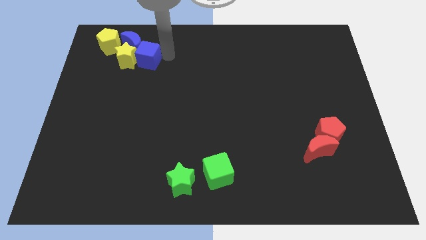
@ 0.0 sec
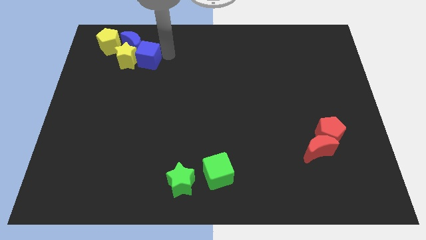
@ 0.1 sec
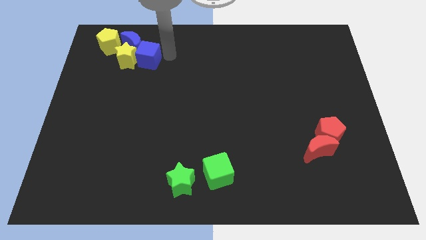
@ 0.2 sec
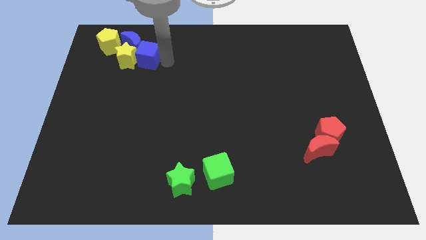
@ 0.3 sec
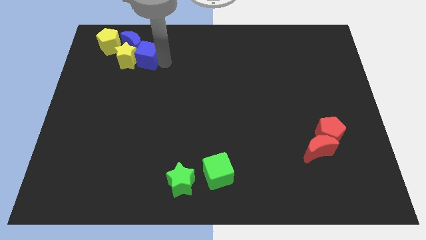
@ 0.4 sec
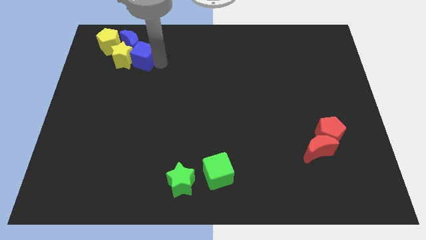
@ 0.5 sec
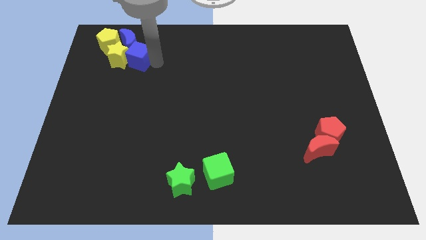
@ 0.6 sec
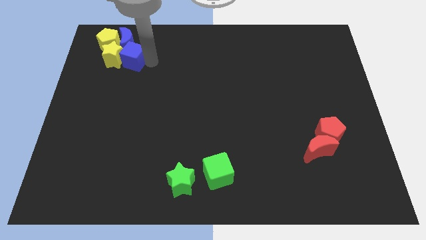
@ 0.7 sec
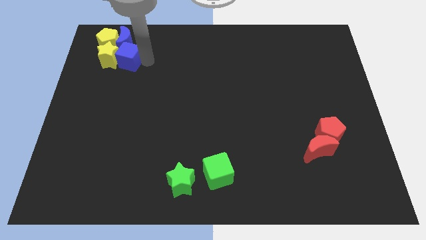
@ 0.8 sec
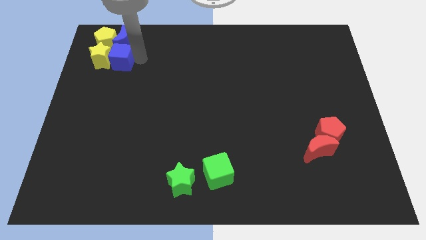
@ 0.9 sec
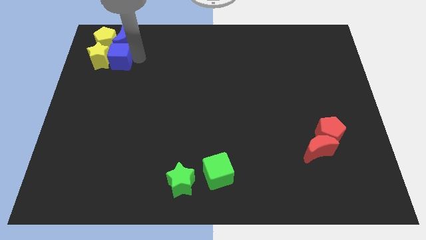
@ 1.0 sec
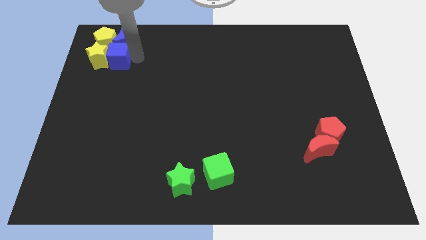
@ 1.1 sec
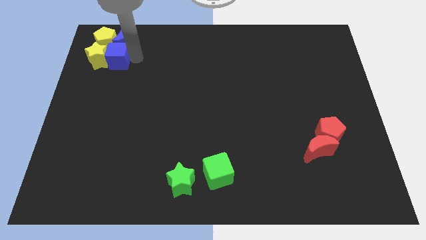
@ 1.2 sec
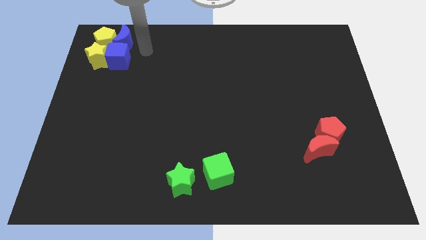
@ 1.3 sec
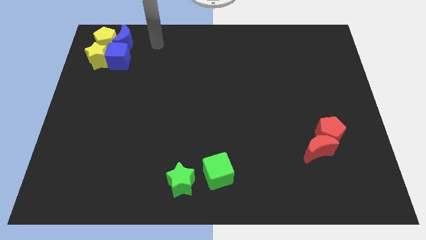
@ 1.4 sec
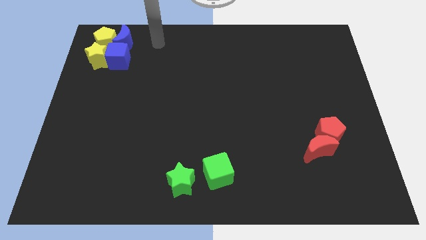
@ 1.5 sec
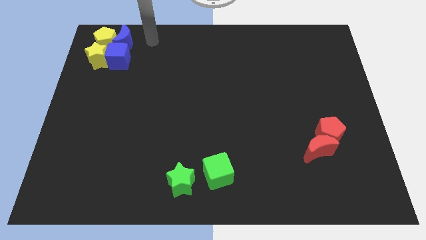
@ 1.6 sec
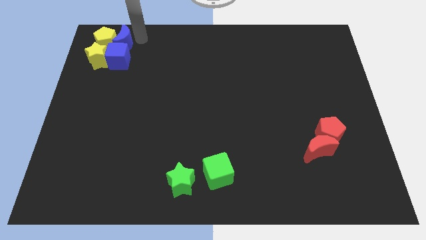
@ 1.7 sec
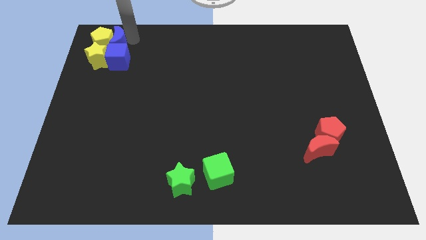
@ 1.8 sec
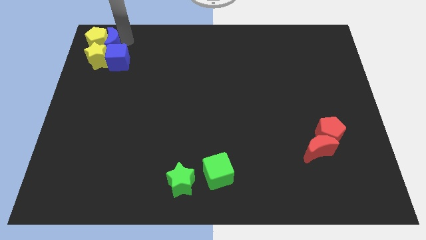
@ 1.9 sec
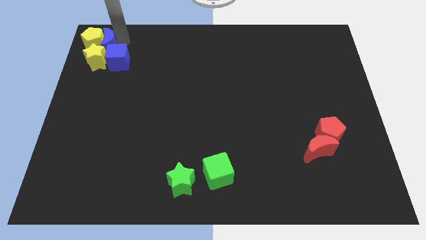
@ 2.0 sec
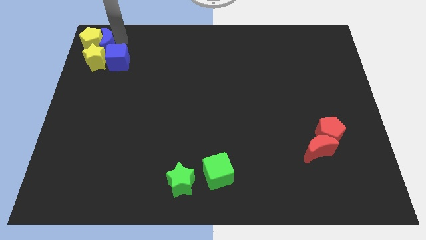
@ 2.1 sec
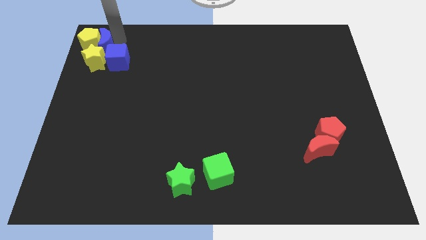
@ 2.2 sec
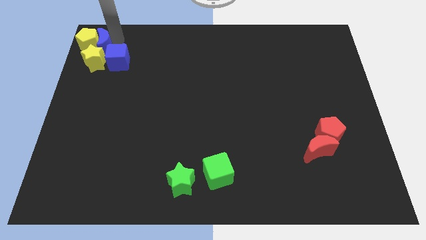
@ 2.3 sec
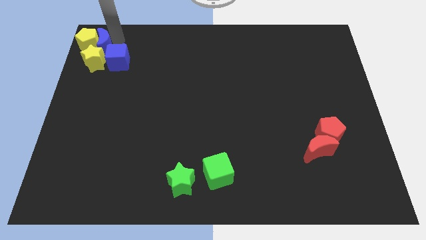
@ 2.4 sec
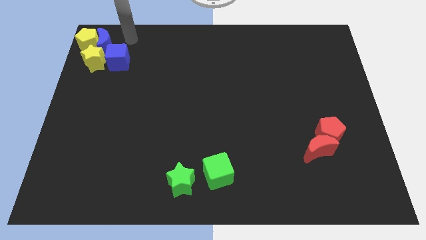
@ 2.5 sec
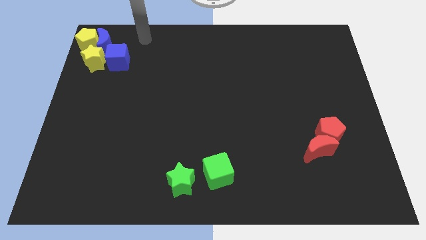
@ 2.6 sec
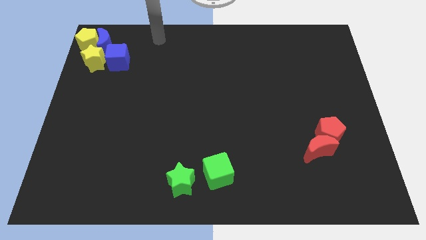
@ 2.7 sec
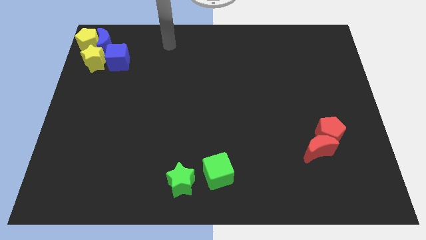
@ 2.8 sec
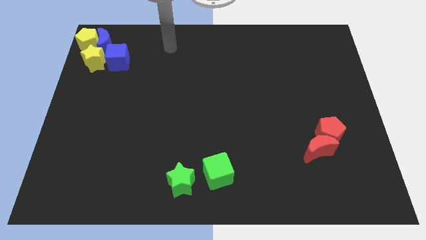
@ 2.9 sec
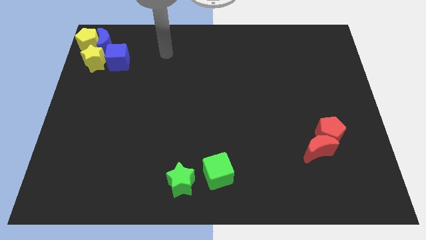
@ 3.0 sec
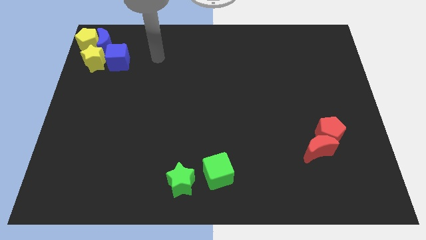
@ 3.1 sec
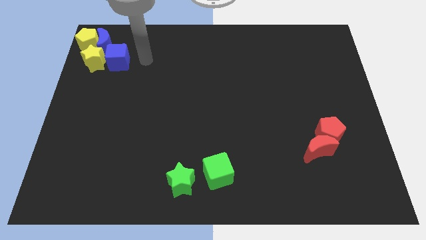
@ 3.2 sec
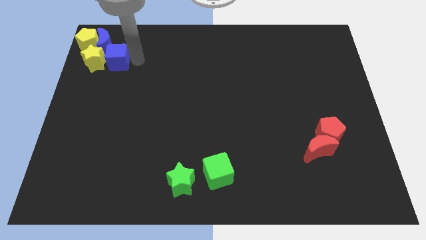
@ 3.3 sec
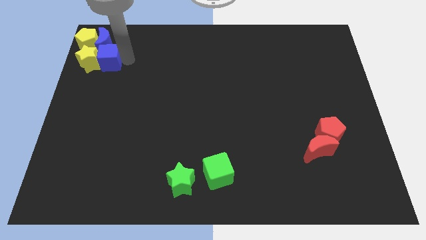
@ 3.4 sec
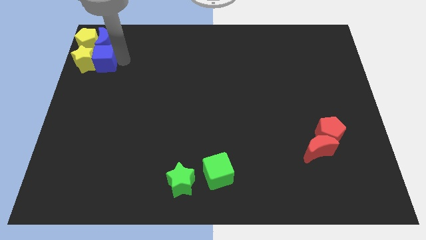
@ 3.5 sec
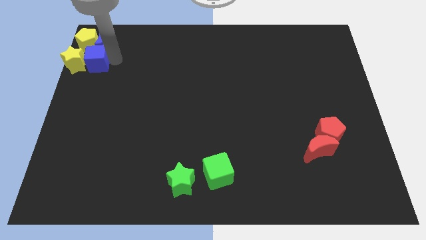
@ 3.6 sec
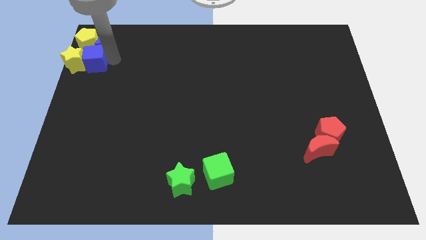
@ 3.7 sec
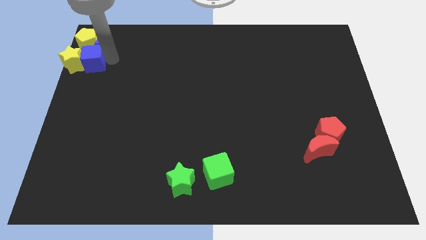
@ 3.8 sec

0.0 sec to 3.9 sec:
move yellow blocks and blue blocks to top left corner

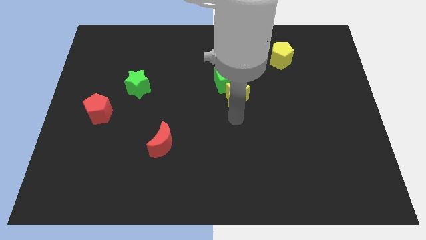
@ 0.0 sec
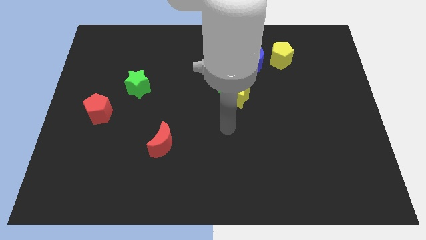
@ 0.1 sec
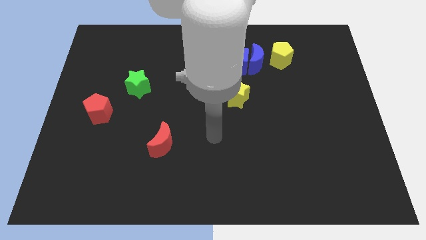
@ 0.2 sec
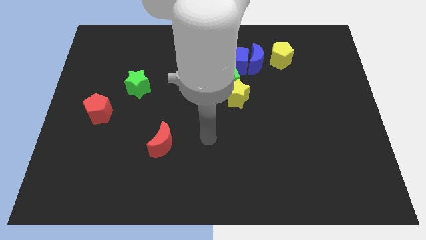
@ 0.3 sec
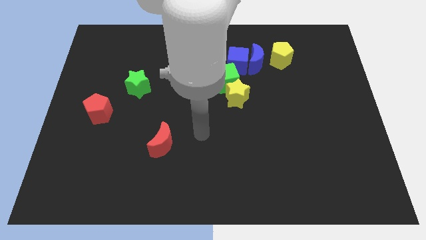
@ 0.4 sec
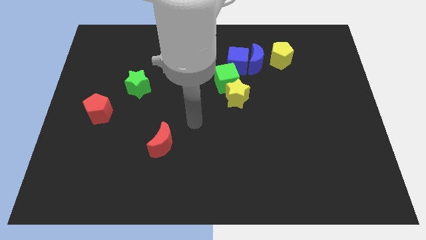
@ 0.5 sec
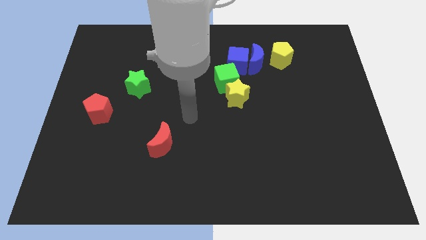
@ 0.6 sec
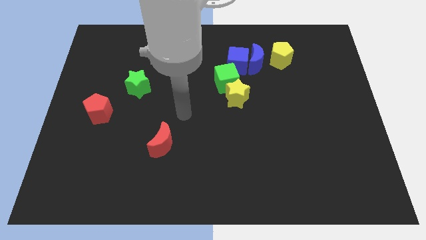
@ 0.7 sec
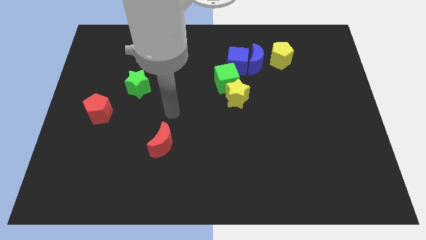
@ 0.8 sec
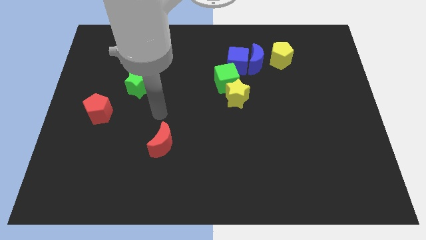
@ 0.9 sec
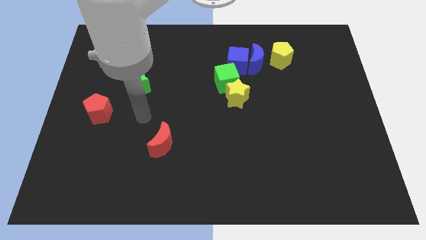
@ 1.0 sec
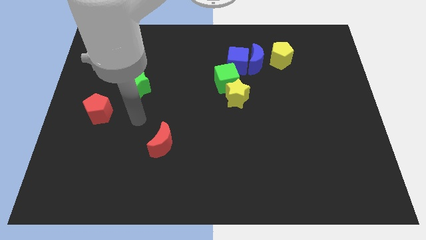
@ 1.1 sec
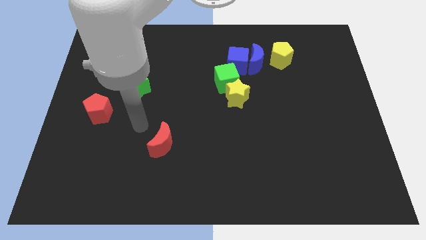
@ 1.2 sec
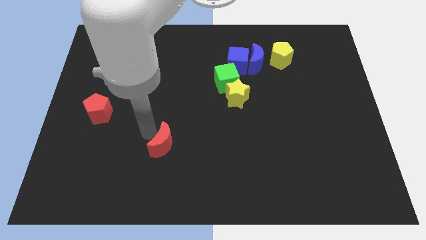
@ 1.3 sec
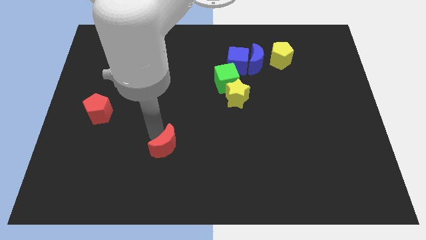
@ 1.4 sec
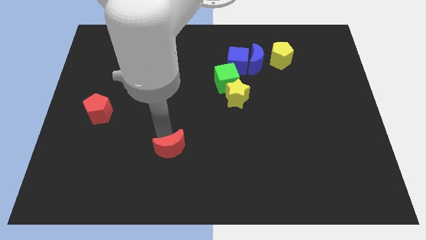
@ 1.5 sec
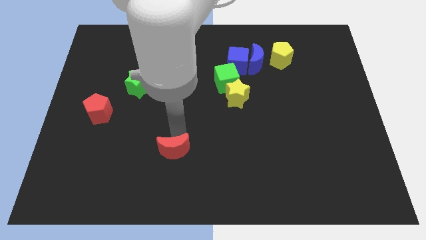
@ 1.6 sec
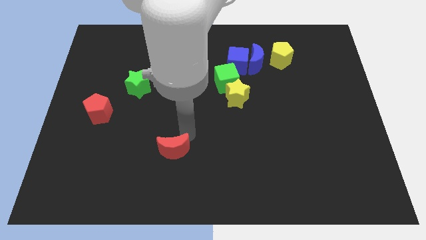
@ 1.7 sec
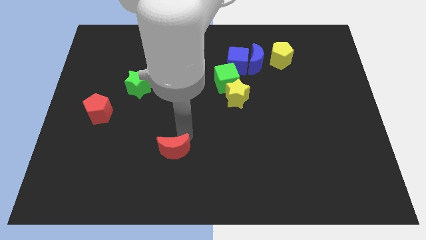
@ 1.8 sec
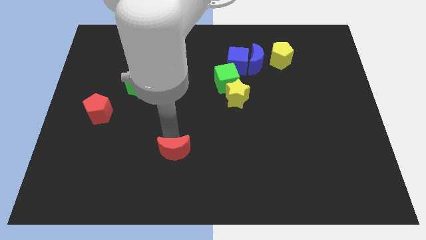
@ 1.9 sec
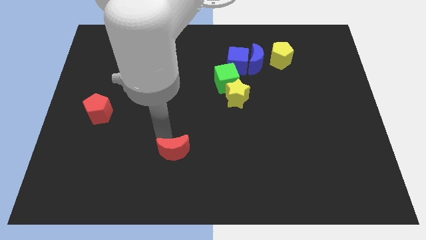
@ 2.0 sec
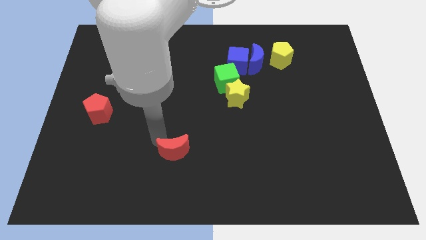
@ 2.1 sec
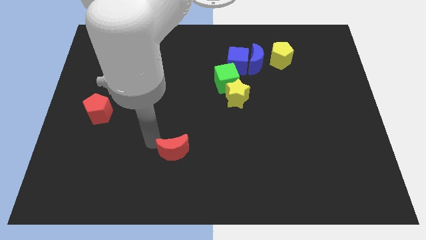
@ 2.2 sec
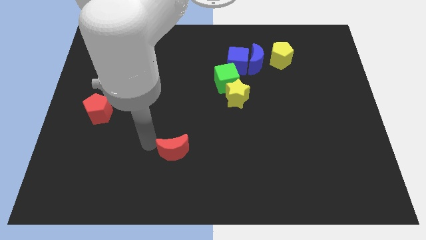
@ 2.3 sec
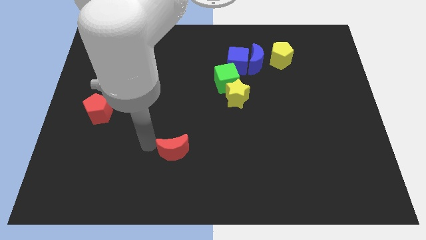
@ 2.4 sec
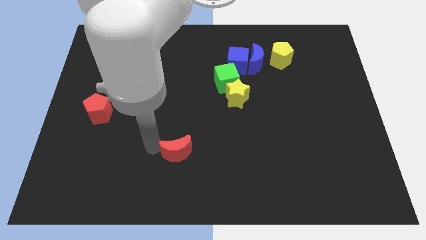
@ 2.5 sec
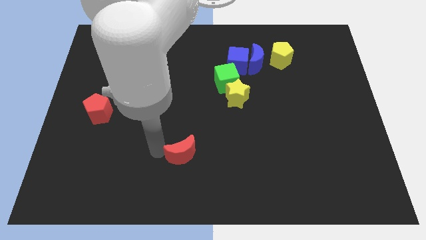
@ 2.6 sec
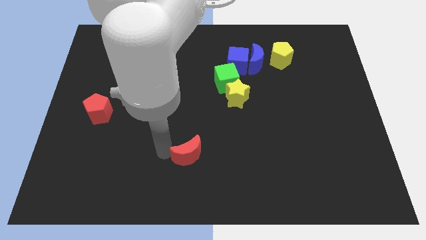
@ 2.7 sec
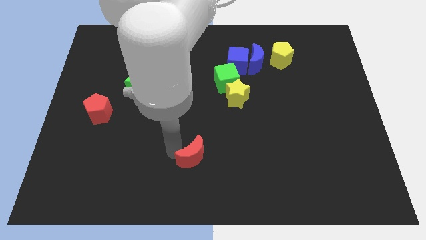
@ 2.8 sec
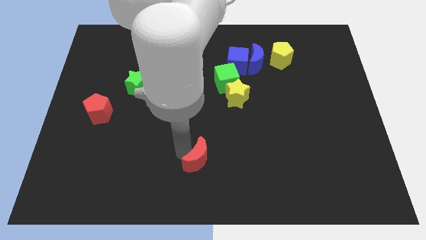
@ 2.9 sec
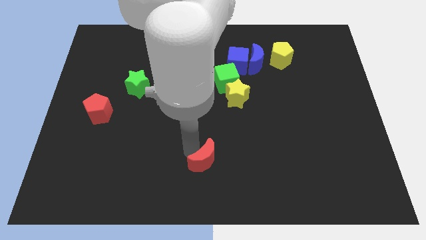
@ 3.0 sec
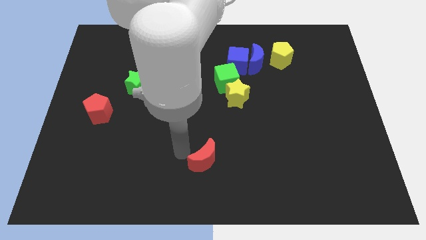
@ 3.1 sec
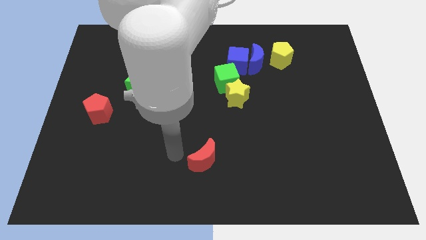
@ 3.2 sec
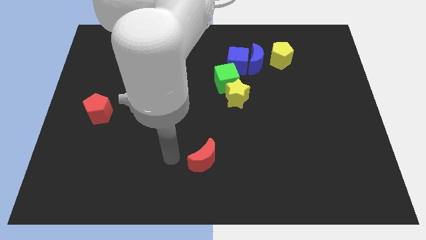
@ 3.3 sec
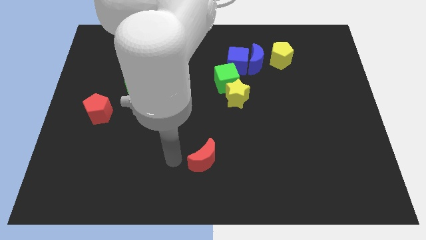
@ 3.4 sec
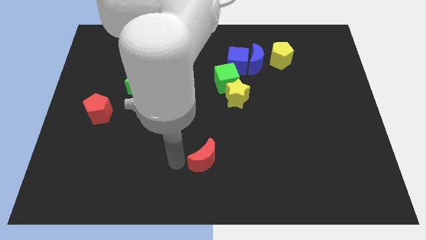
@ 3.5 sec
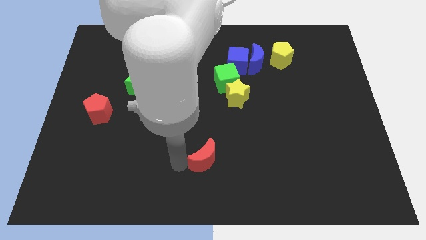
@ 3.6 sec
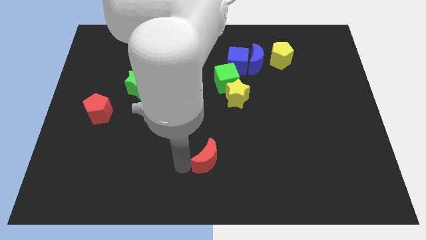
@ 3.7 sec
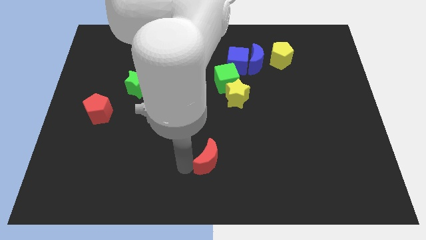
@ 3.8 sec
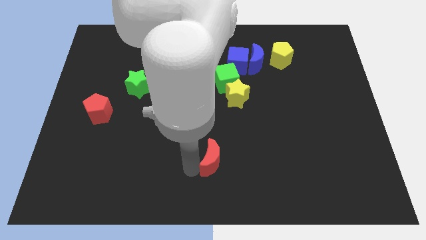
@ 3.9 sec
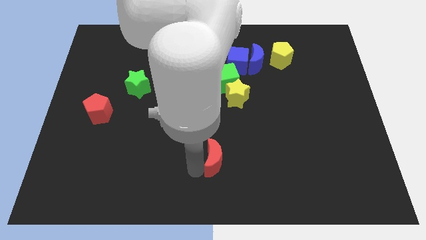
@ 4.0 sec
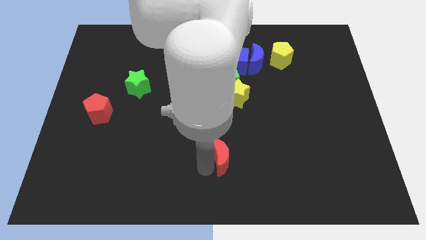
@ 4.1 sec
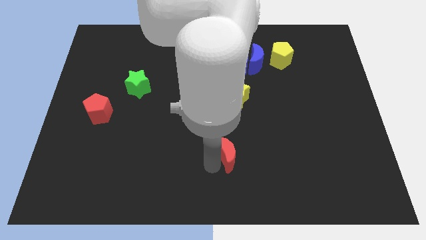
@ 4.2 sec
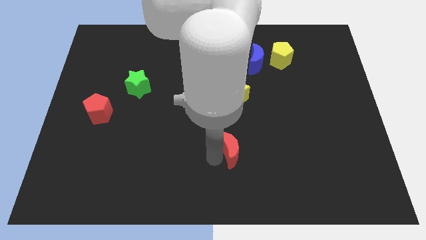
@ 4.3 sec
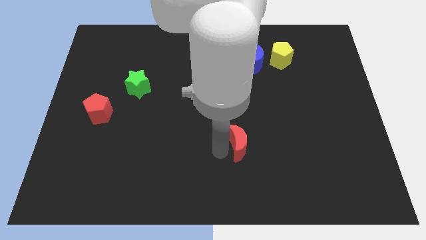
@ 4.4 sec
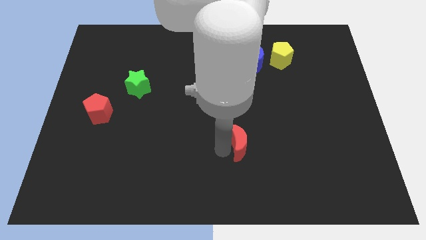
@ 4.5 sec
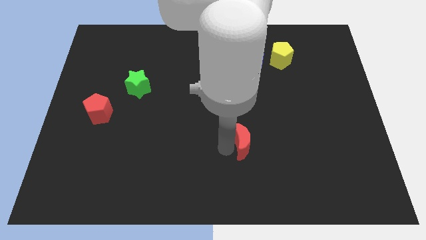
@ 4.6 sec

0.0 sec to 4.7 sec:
push the red moon towards the right side of the board

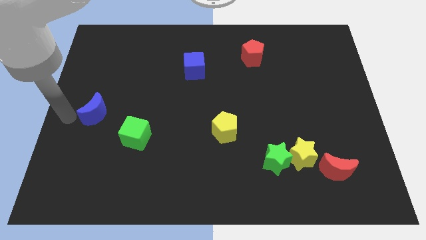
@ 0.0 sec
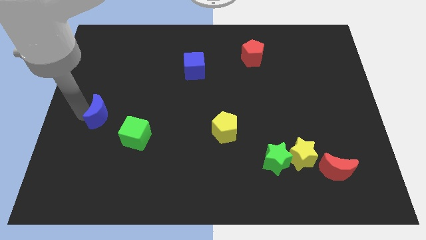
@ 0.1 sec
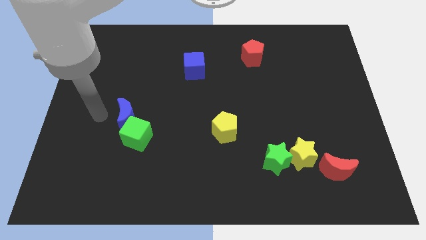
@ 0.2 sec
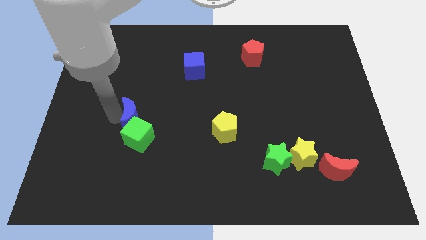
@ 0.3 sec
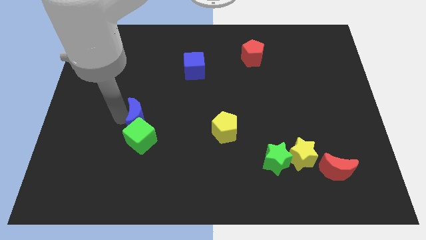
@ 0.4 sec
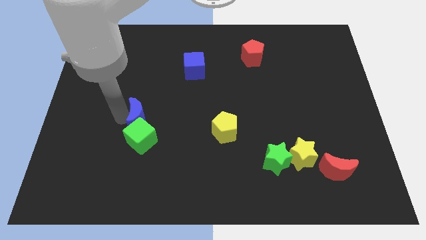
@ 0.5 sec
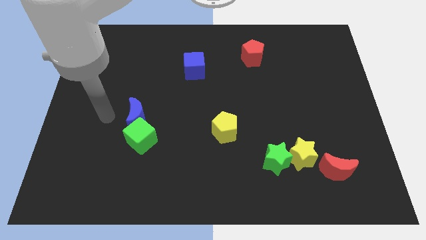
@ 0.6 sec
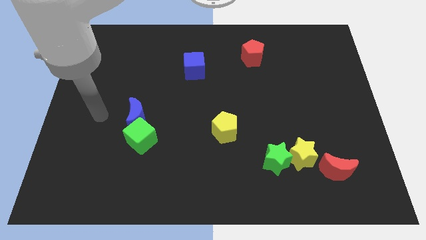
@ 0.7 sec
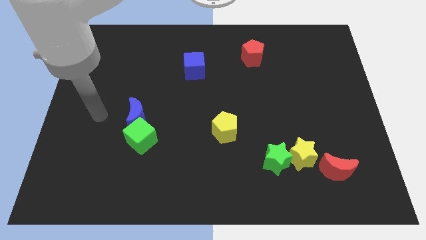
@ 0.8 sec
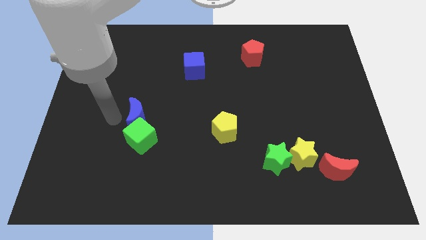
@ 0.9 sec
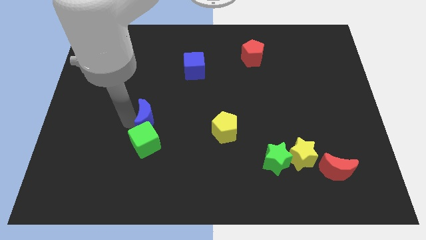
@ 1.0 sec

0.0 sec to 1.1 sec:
slide the blue crescent into the green cube
